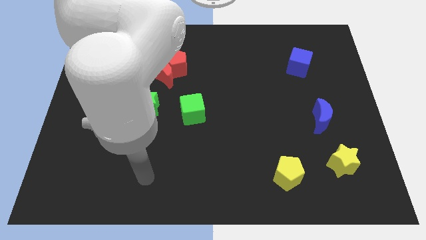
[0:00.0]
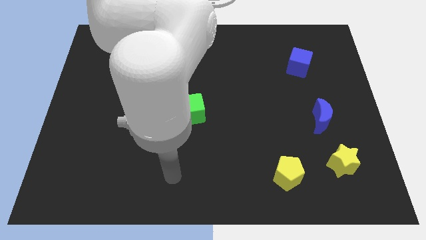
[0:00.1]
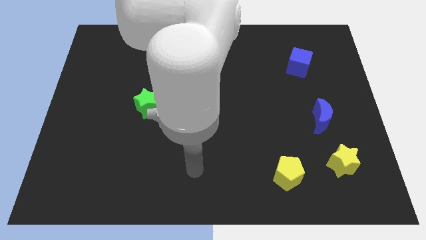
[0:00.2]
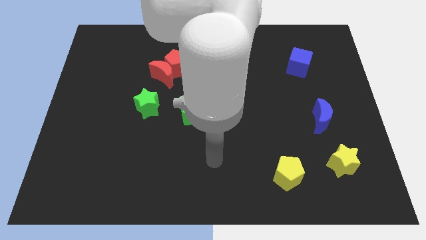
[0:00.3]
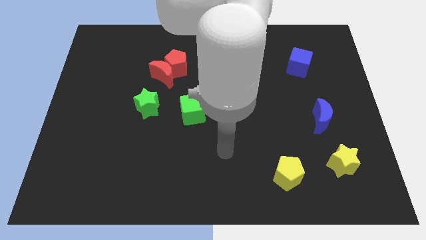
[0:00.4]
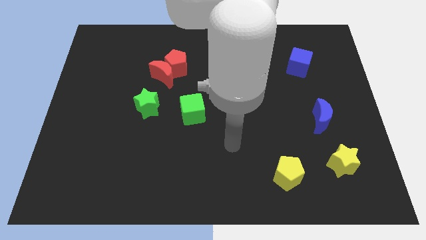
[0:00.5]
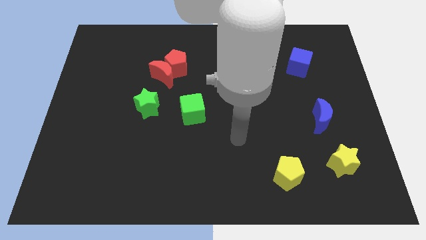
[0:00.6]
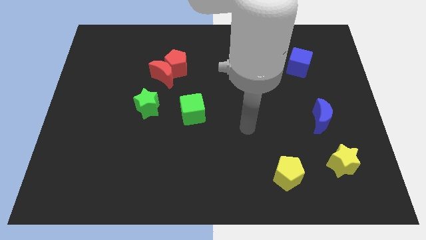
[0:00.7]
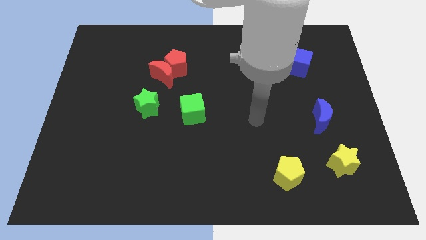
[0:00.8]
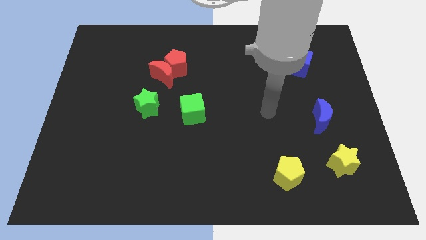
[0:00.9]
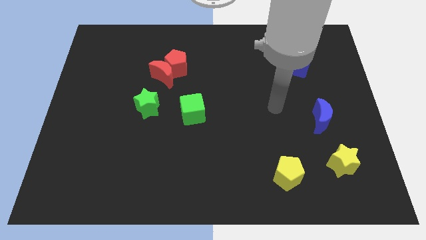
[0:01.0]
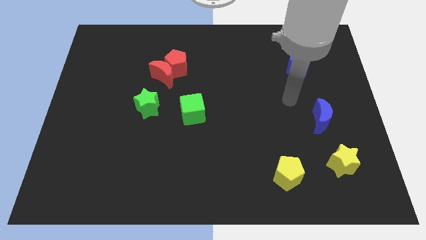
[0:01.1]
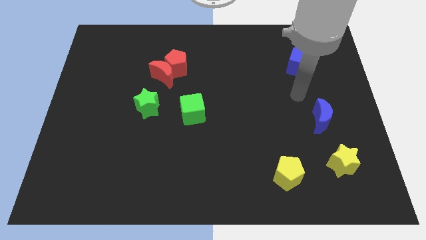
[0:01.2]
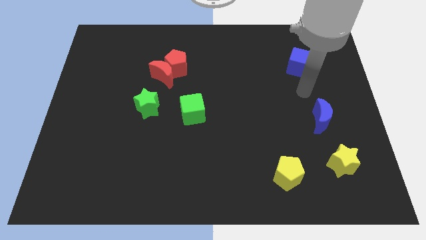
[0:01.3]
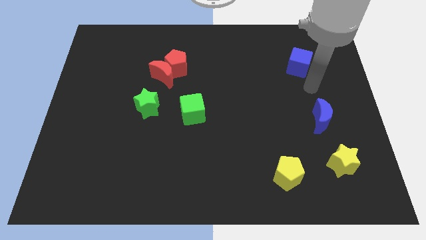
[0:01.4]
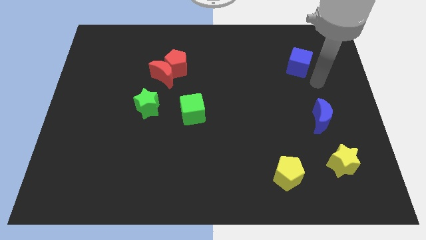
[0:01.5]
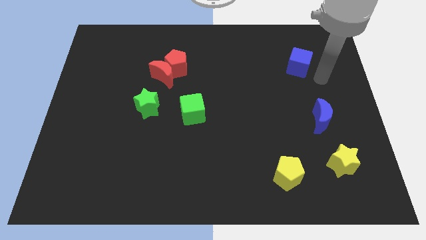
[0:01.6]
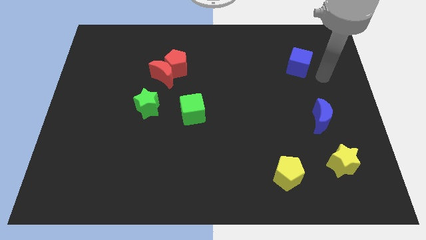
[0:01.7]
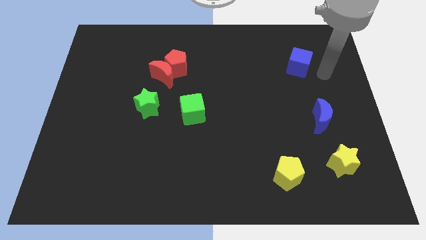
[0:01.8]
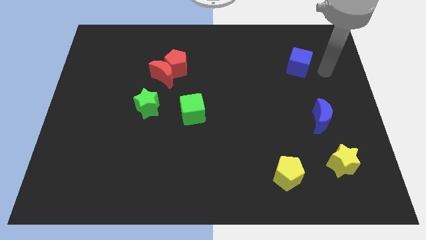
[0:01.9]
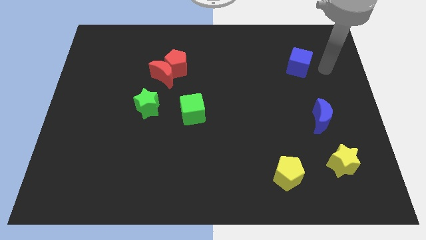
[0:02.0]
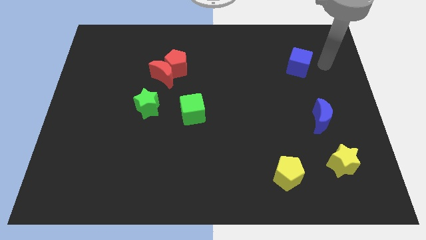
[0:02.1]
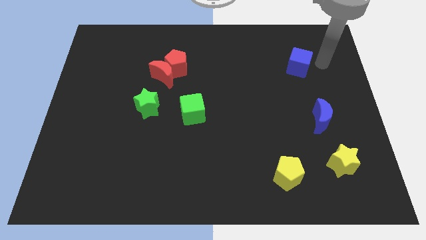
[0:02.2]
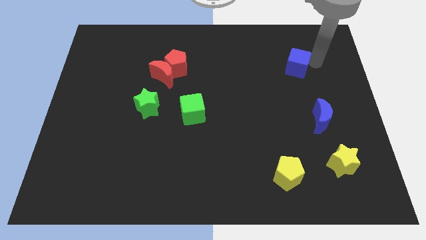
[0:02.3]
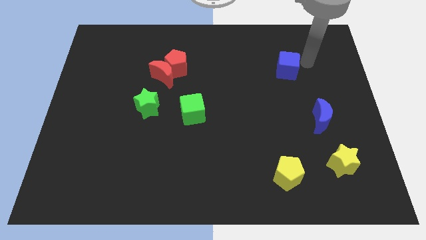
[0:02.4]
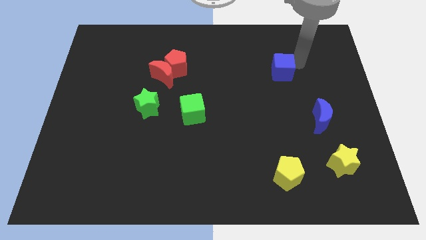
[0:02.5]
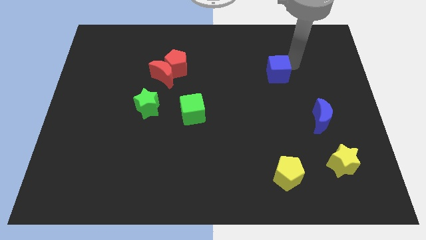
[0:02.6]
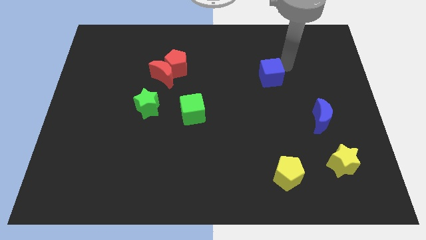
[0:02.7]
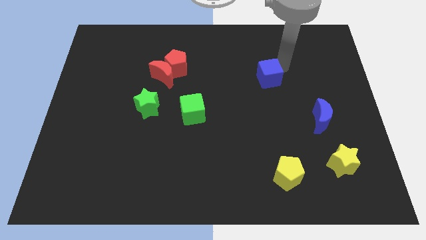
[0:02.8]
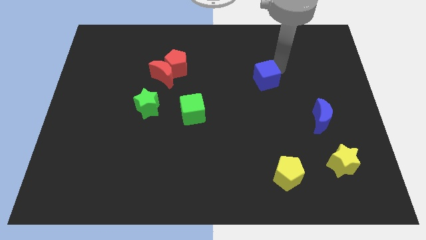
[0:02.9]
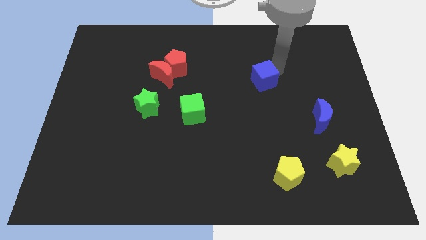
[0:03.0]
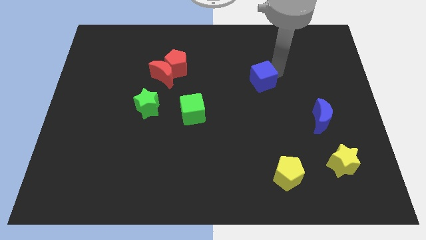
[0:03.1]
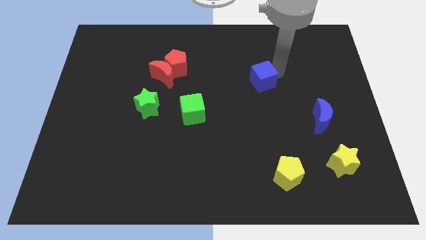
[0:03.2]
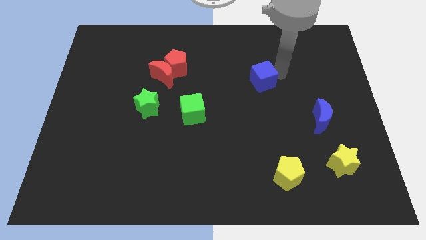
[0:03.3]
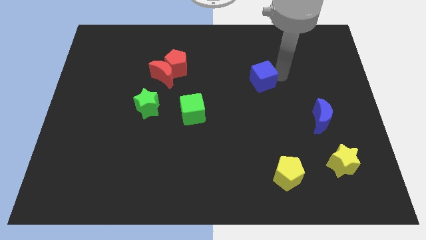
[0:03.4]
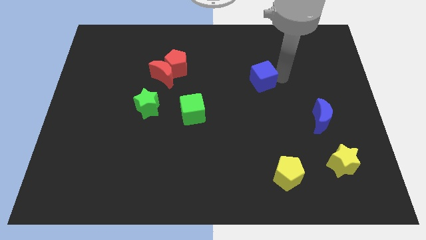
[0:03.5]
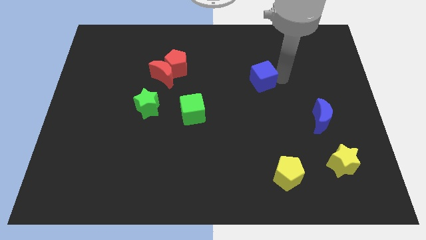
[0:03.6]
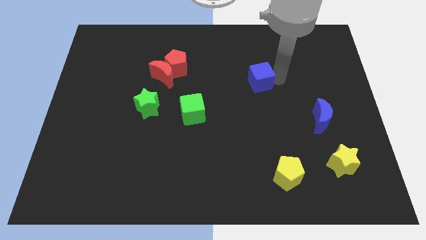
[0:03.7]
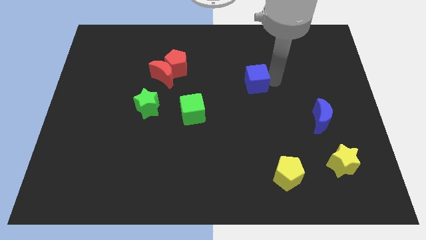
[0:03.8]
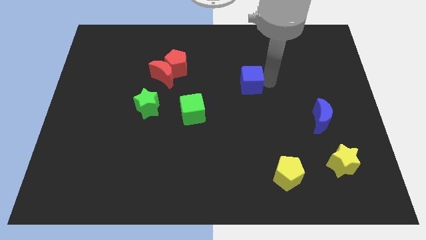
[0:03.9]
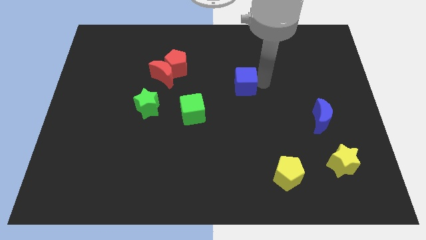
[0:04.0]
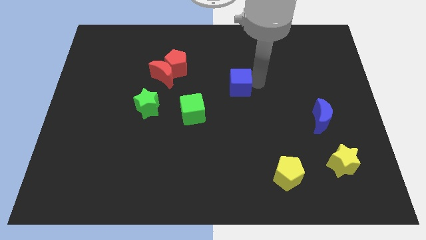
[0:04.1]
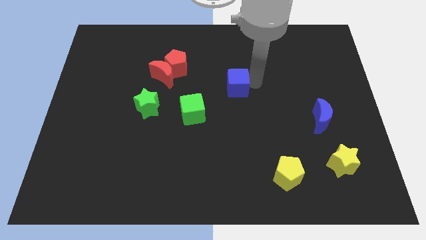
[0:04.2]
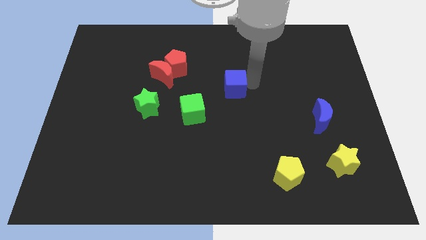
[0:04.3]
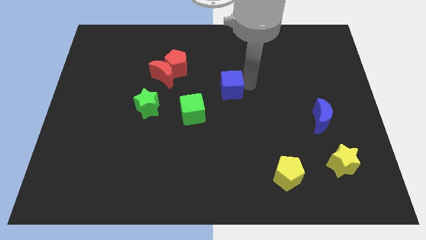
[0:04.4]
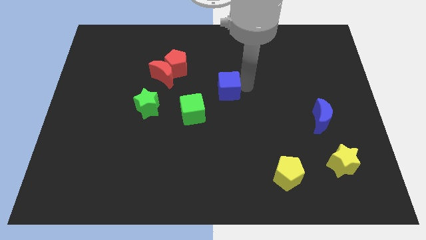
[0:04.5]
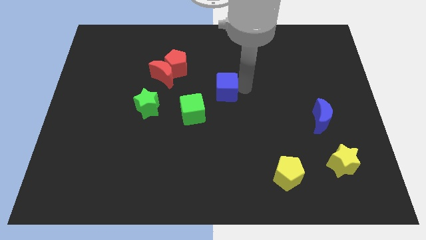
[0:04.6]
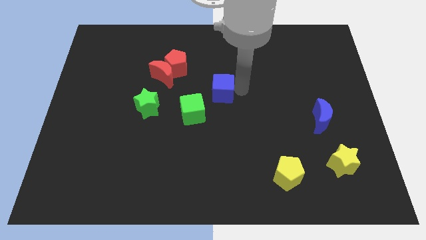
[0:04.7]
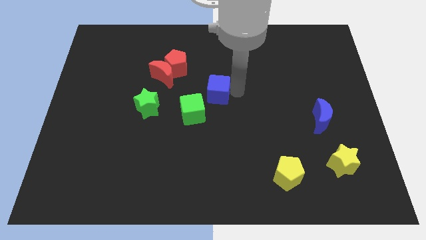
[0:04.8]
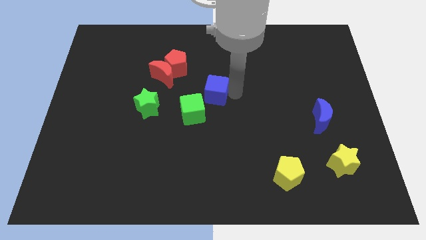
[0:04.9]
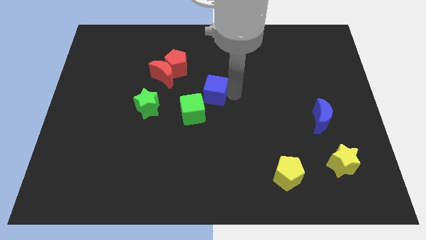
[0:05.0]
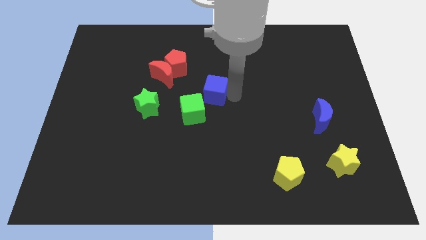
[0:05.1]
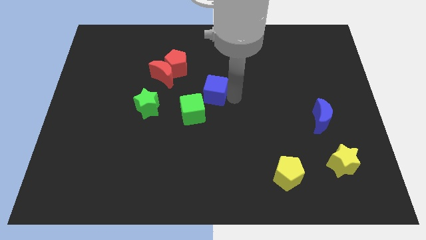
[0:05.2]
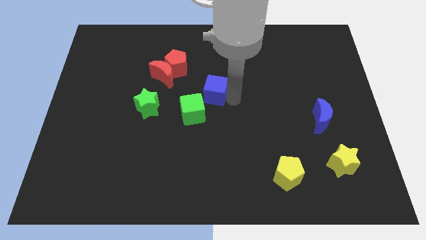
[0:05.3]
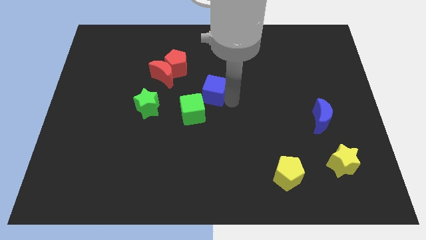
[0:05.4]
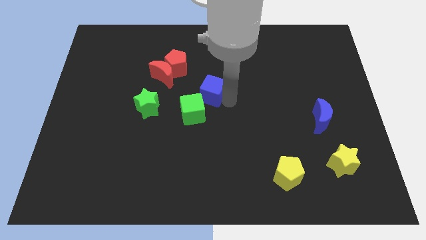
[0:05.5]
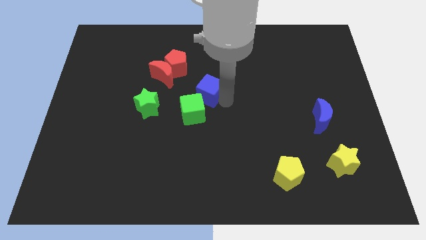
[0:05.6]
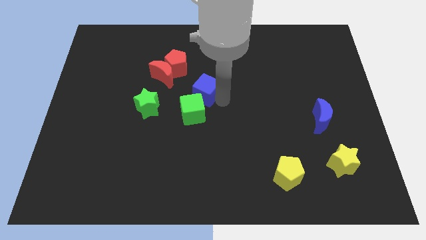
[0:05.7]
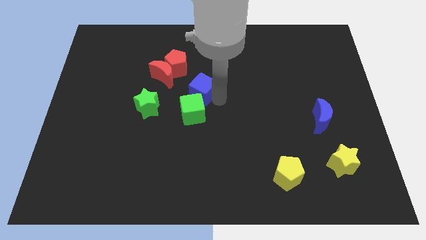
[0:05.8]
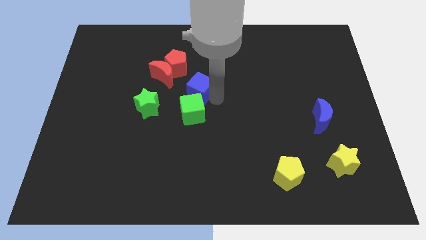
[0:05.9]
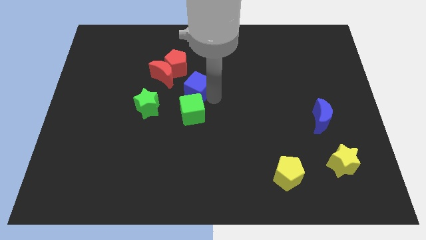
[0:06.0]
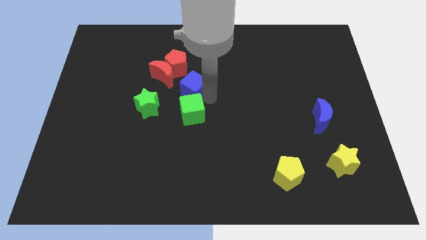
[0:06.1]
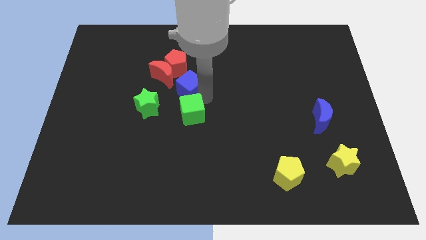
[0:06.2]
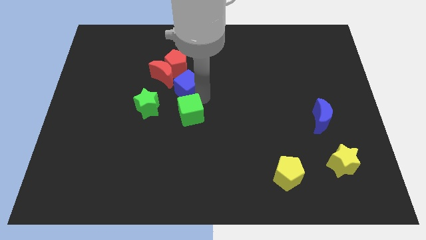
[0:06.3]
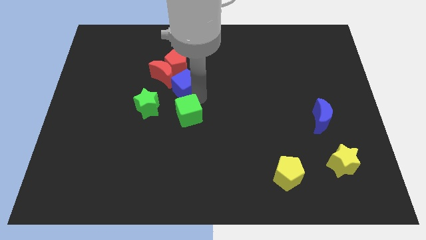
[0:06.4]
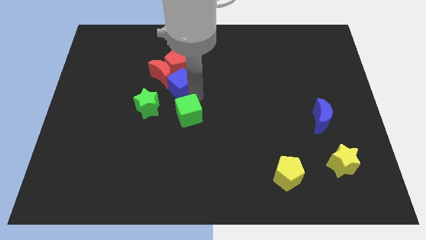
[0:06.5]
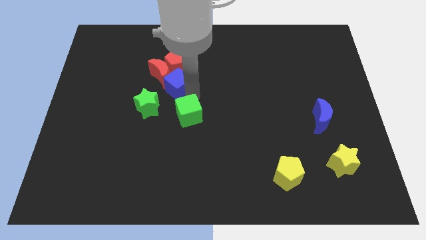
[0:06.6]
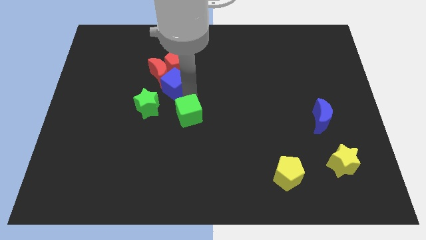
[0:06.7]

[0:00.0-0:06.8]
slide the blue cube close to the red moon

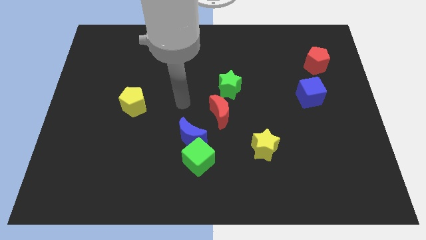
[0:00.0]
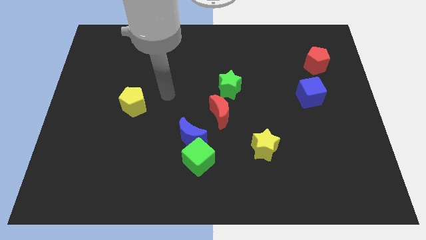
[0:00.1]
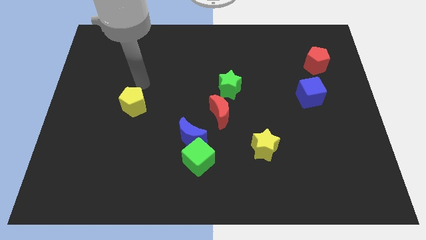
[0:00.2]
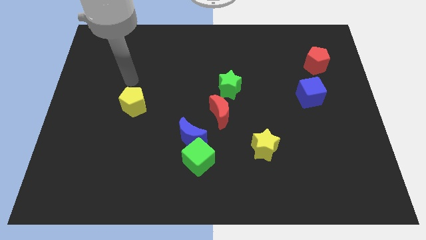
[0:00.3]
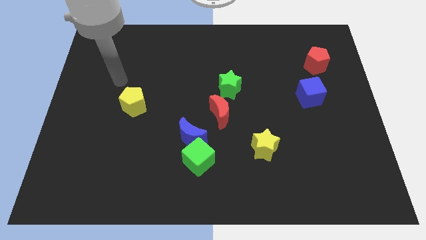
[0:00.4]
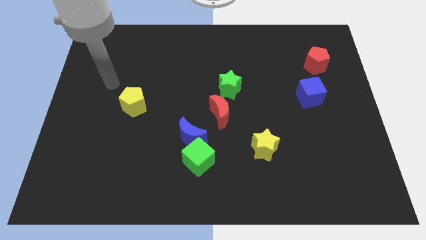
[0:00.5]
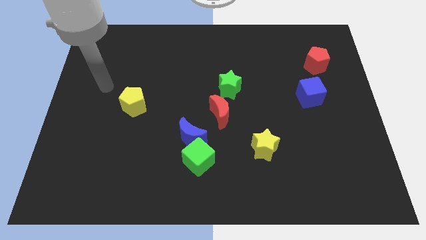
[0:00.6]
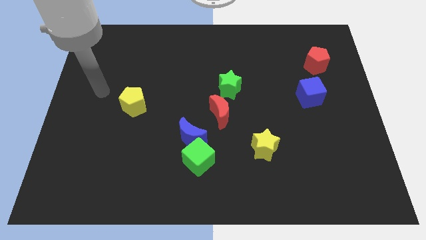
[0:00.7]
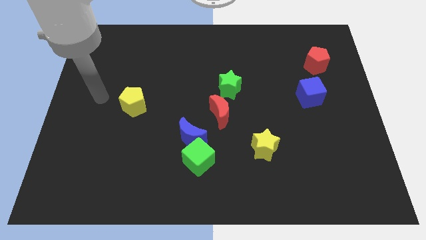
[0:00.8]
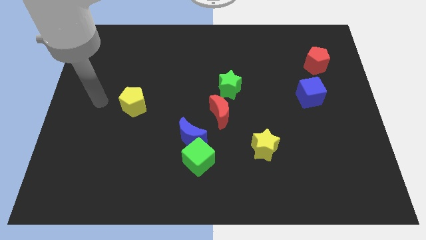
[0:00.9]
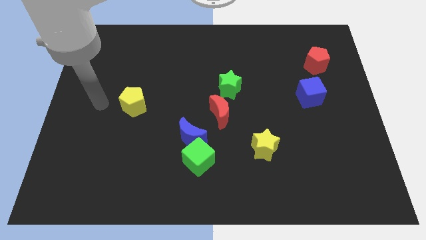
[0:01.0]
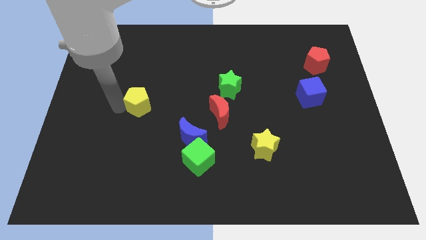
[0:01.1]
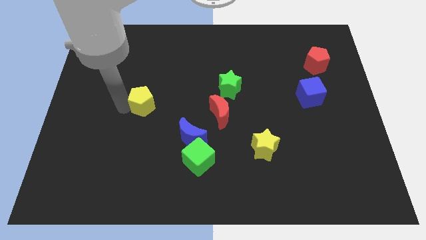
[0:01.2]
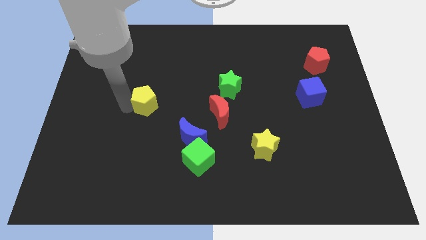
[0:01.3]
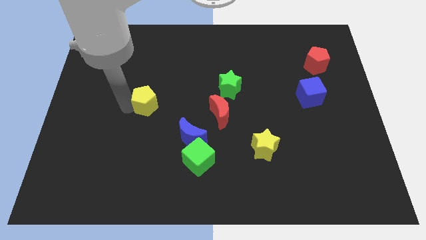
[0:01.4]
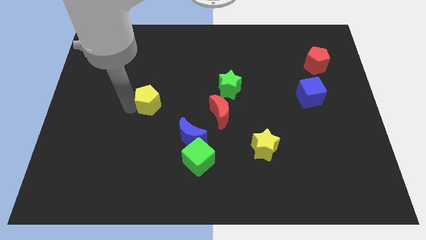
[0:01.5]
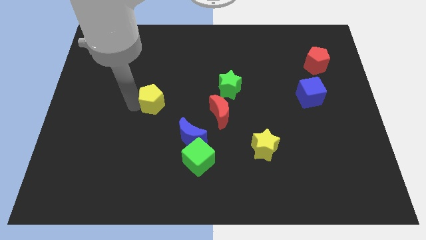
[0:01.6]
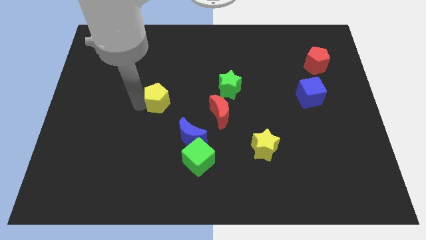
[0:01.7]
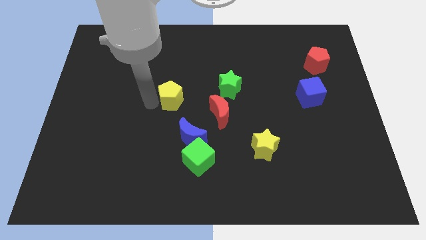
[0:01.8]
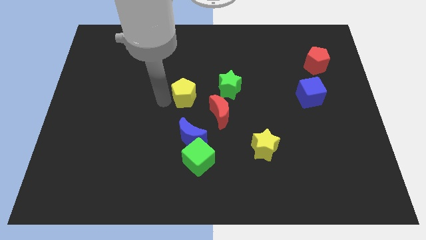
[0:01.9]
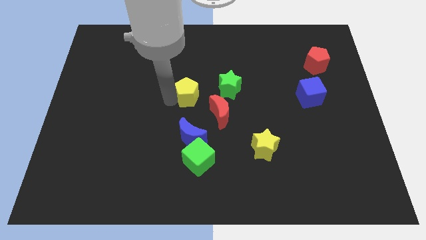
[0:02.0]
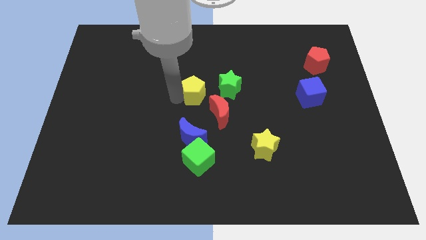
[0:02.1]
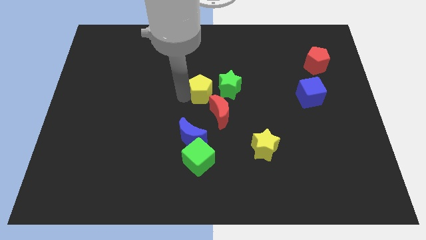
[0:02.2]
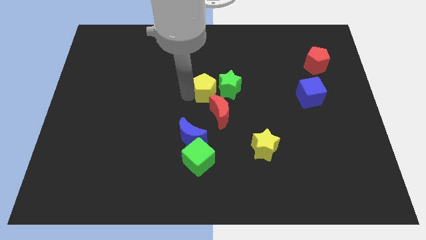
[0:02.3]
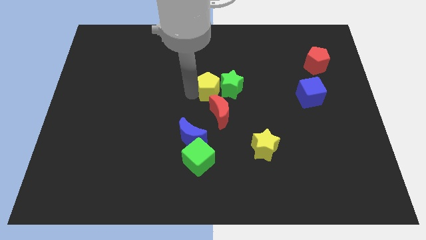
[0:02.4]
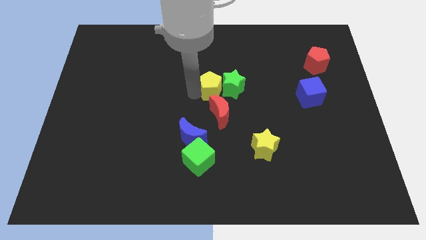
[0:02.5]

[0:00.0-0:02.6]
put the yellow pentagon to the green star
